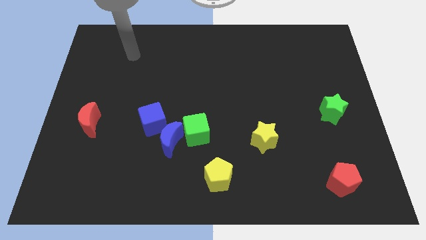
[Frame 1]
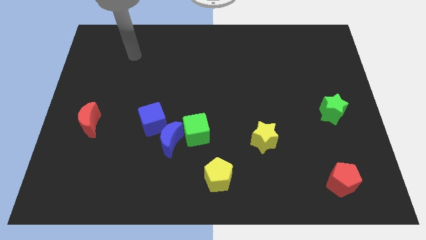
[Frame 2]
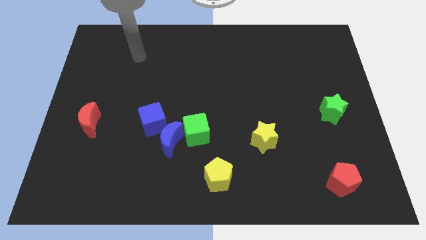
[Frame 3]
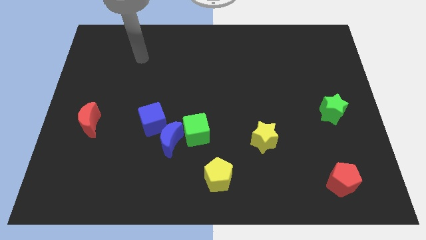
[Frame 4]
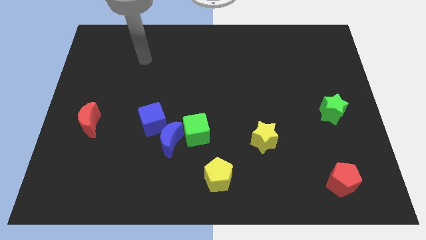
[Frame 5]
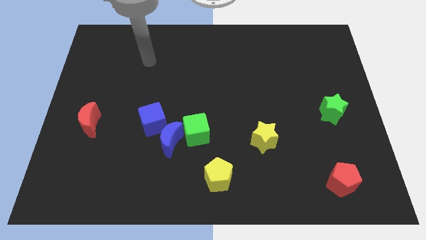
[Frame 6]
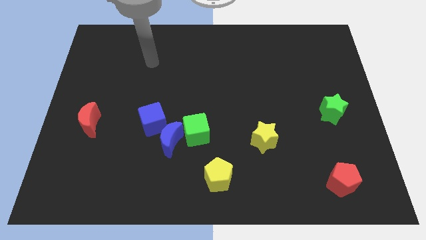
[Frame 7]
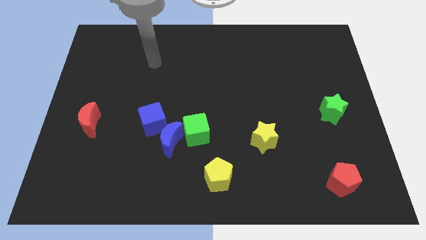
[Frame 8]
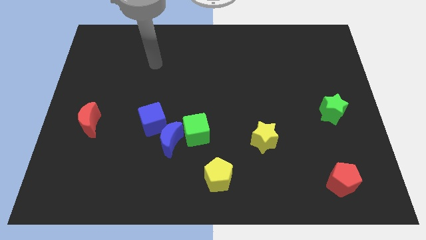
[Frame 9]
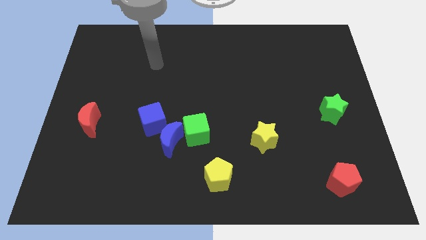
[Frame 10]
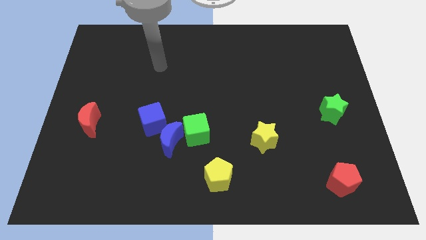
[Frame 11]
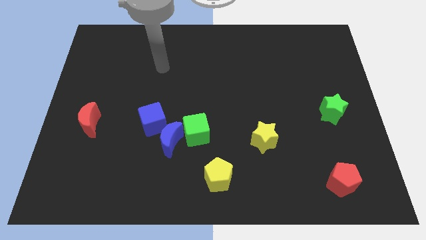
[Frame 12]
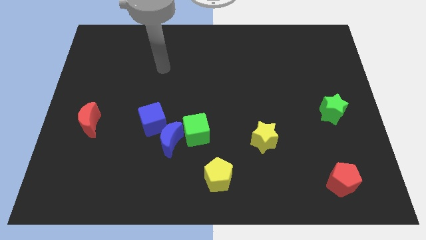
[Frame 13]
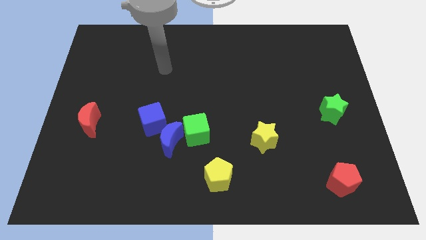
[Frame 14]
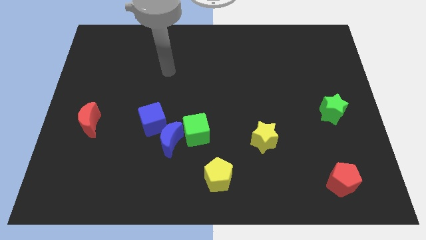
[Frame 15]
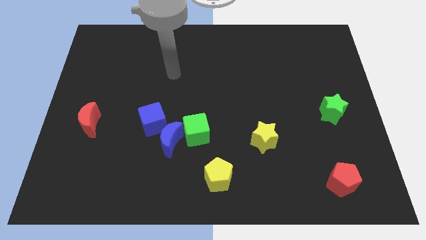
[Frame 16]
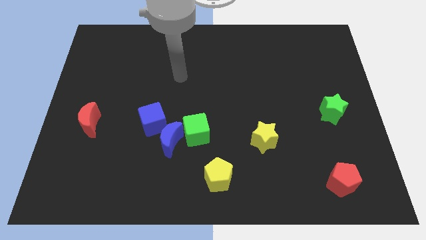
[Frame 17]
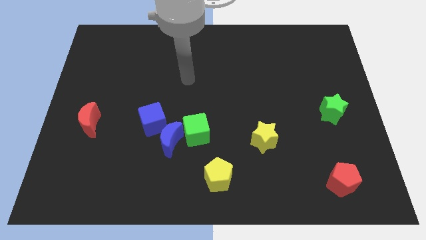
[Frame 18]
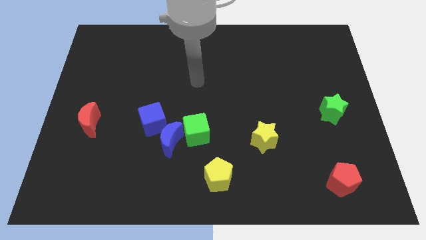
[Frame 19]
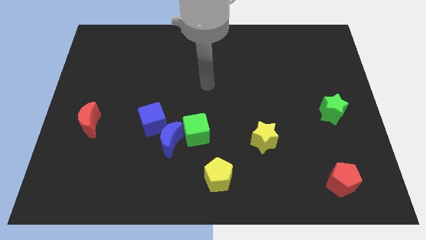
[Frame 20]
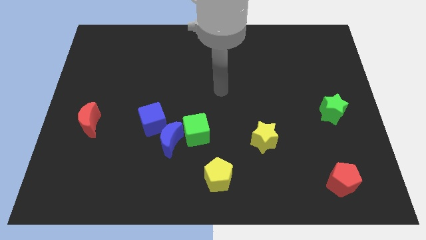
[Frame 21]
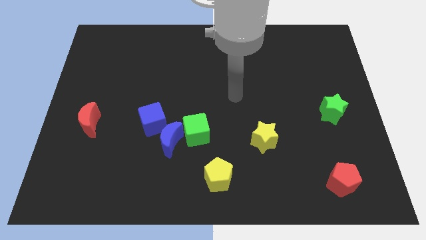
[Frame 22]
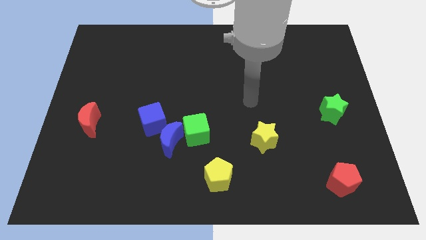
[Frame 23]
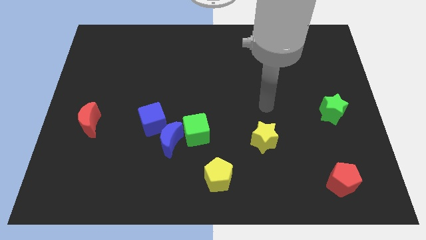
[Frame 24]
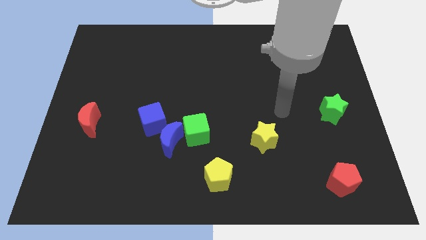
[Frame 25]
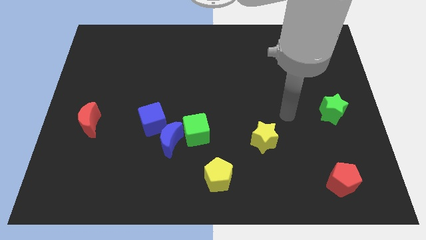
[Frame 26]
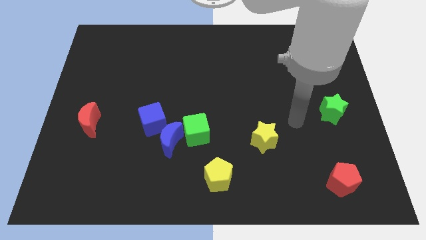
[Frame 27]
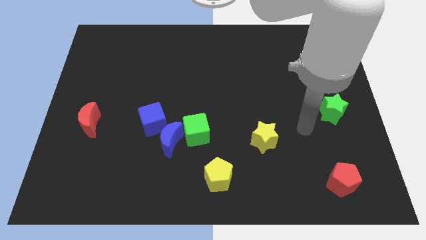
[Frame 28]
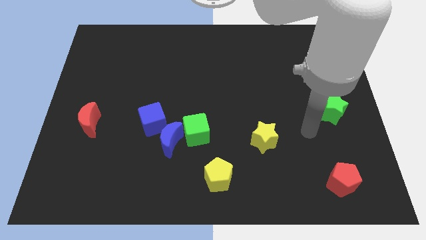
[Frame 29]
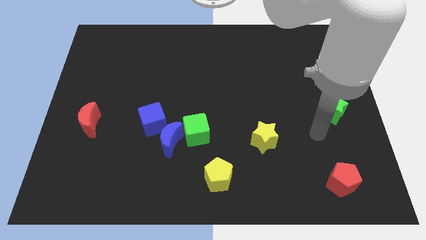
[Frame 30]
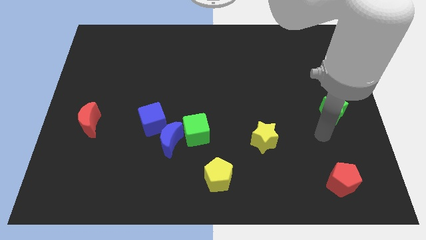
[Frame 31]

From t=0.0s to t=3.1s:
move your arm towards the bottom right corner of the board

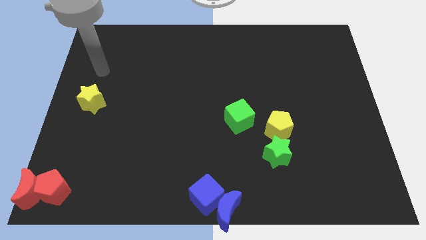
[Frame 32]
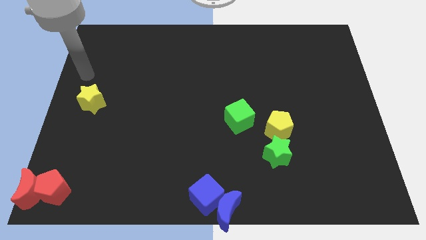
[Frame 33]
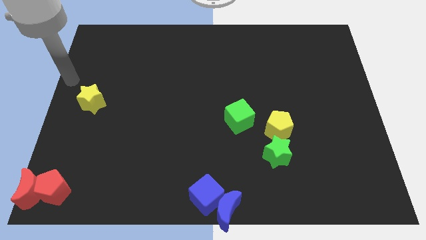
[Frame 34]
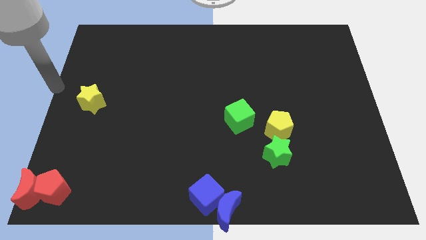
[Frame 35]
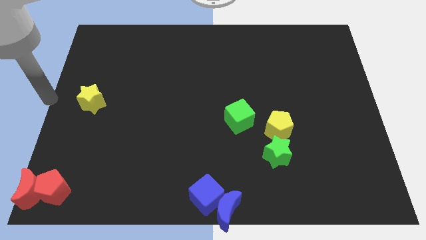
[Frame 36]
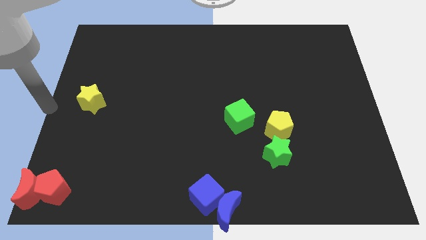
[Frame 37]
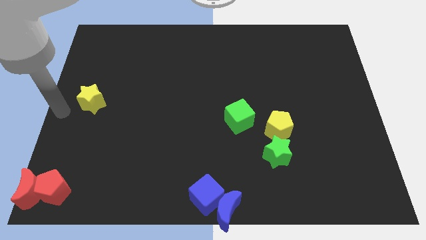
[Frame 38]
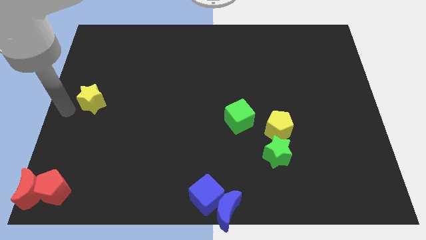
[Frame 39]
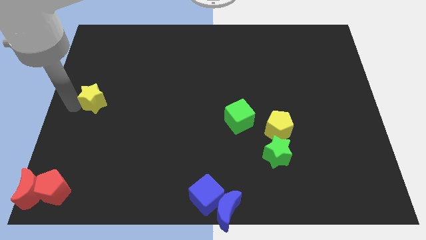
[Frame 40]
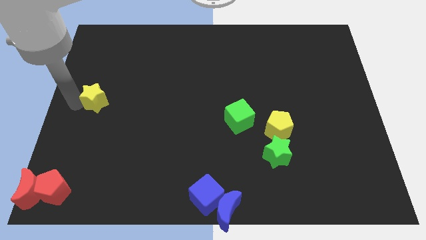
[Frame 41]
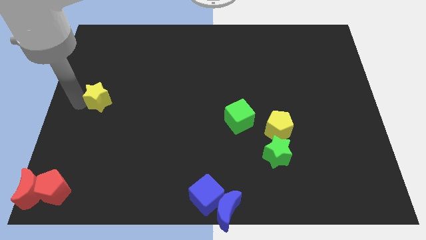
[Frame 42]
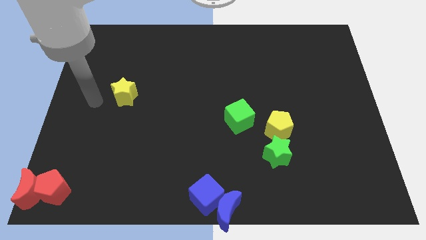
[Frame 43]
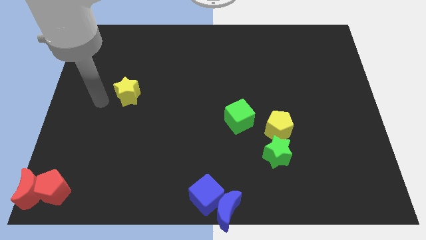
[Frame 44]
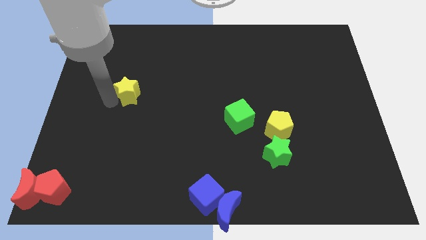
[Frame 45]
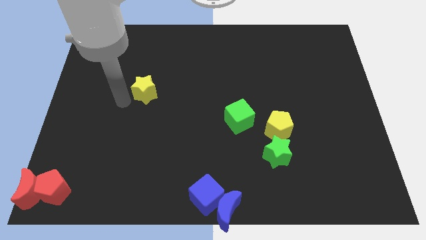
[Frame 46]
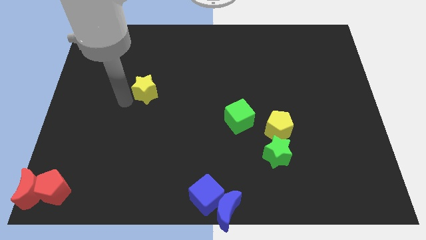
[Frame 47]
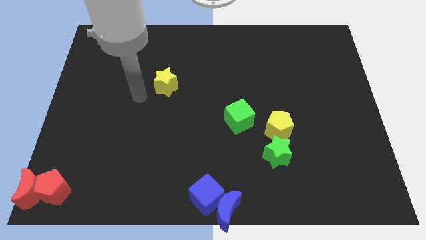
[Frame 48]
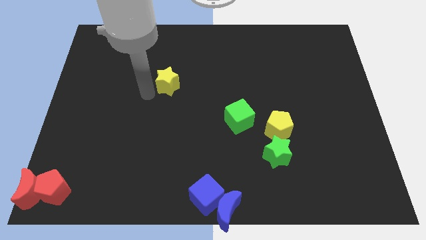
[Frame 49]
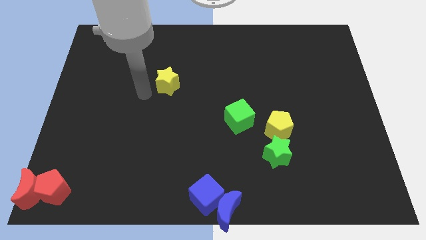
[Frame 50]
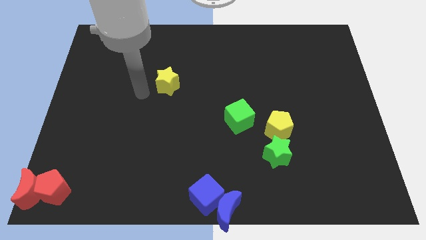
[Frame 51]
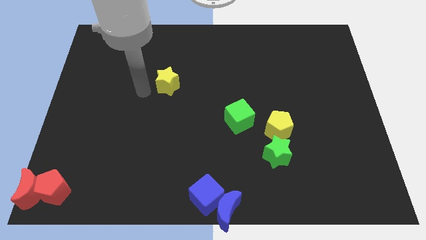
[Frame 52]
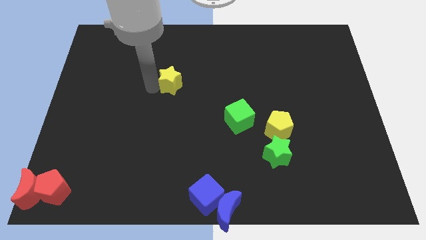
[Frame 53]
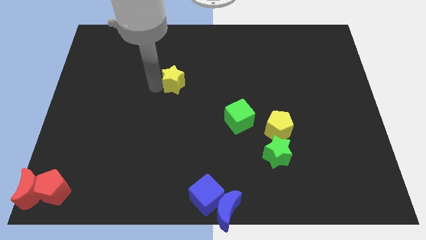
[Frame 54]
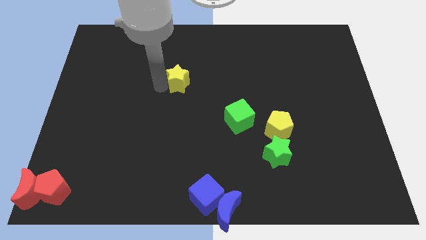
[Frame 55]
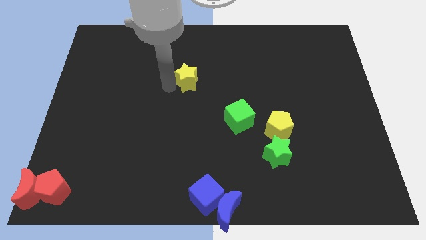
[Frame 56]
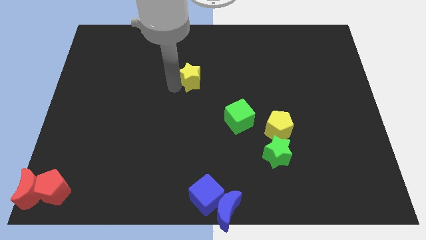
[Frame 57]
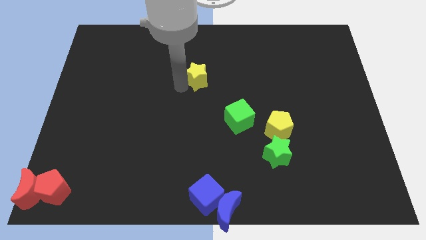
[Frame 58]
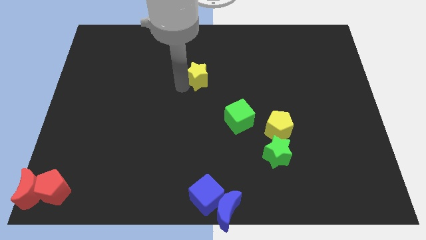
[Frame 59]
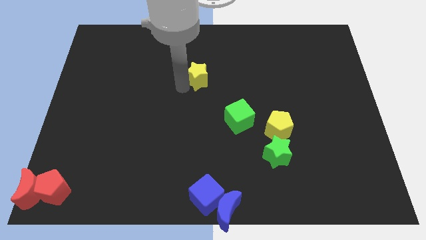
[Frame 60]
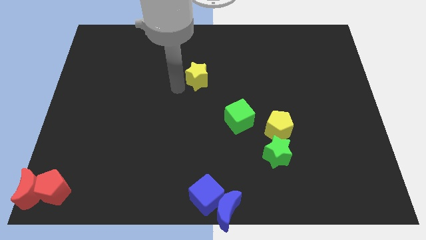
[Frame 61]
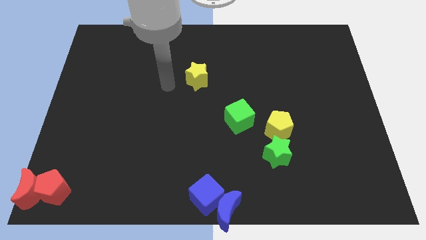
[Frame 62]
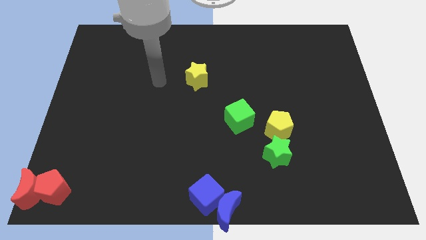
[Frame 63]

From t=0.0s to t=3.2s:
place the yellow star diagonally to the top left of green cube

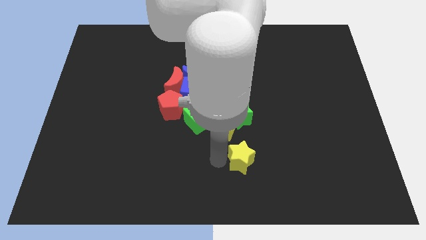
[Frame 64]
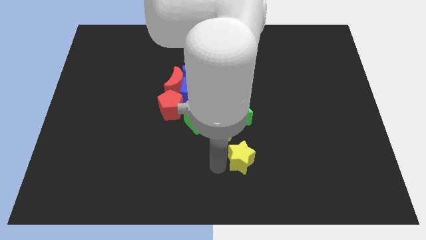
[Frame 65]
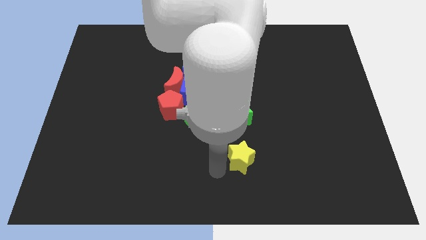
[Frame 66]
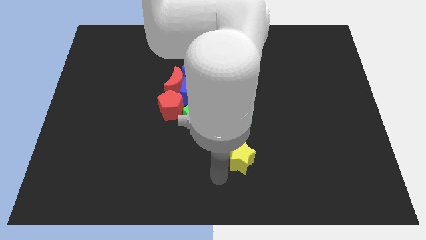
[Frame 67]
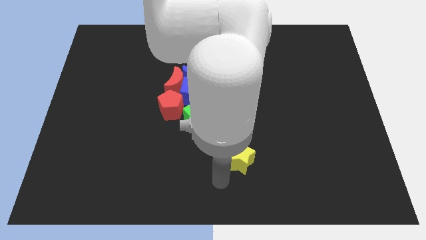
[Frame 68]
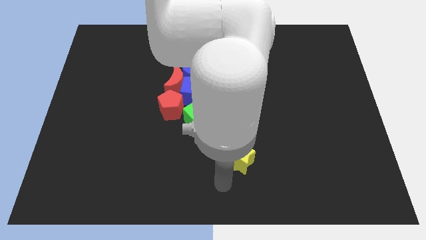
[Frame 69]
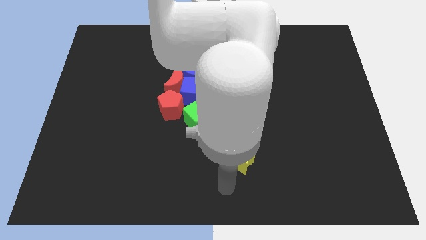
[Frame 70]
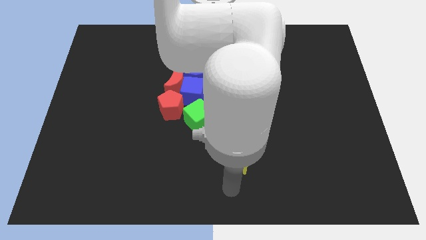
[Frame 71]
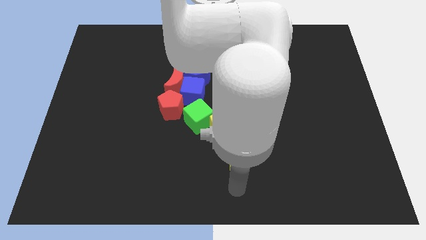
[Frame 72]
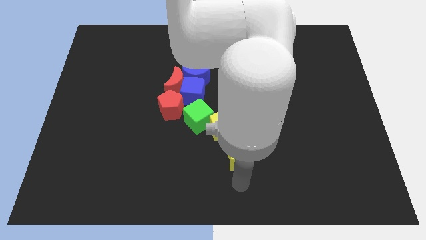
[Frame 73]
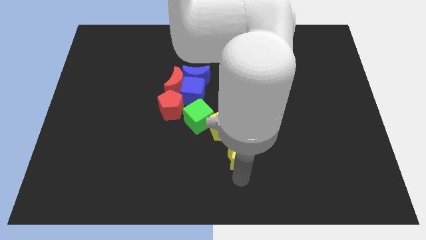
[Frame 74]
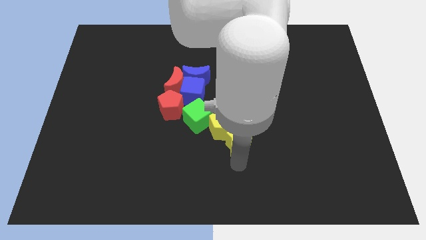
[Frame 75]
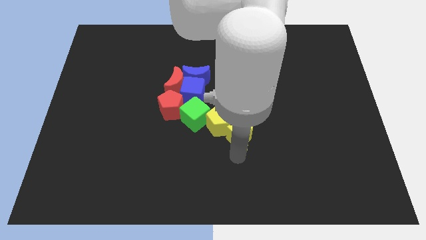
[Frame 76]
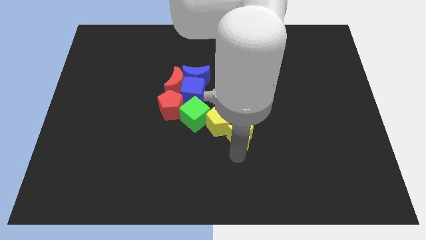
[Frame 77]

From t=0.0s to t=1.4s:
move the yellow star below the yellow pentagon

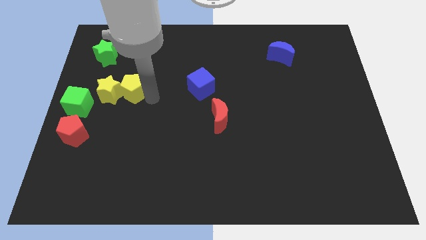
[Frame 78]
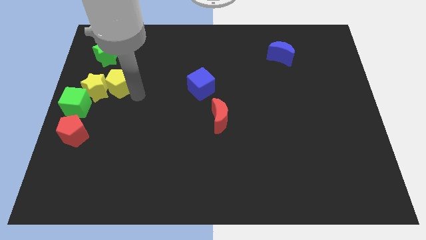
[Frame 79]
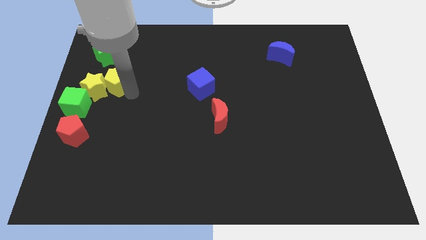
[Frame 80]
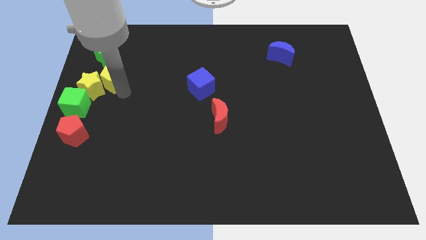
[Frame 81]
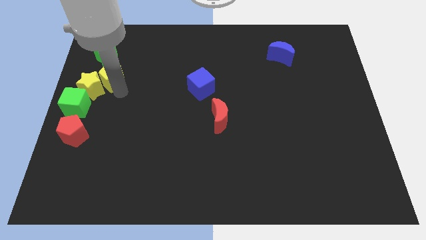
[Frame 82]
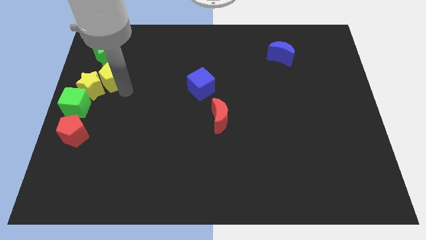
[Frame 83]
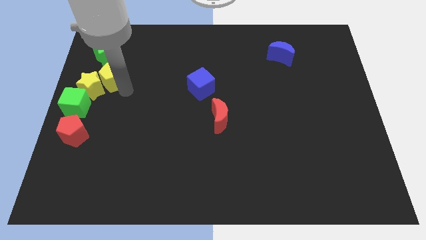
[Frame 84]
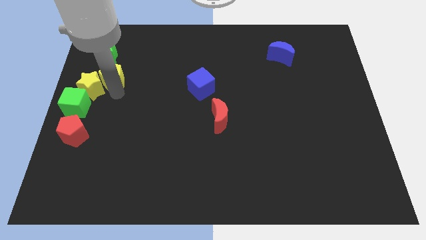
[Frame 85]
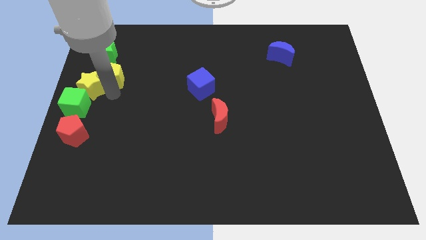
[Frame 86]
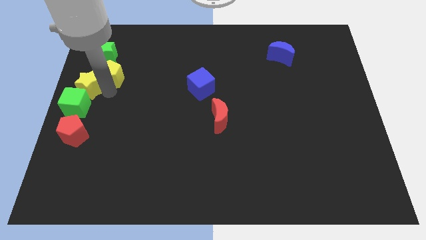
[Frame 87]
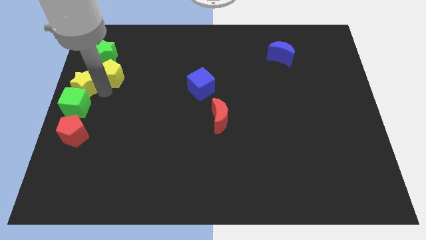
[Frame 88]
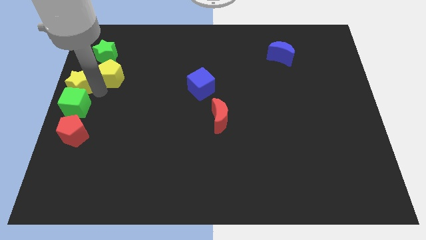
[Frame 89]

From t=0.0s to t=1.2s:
drag the yellow pentagon slightly to the left
